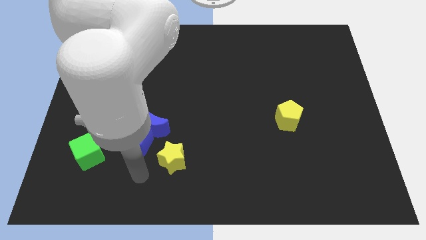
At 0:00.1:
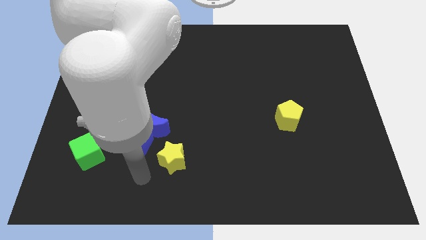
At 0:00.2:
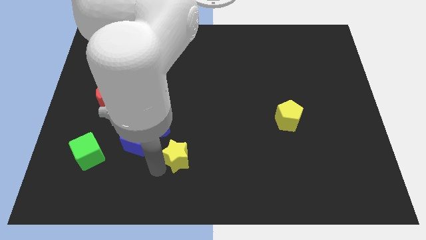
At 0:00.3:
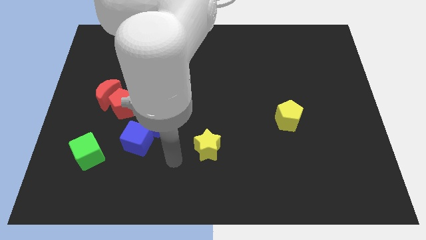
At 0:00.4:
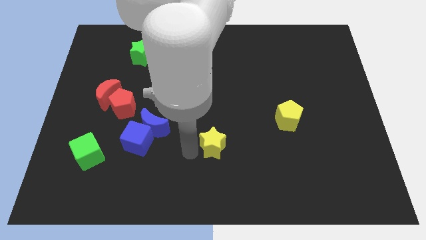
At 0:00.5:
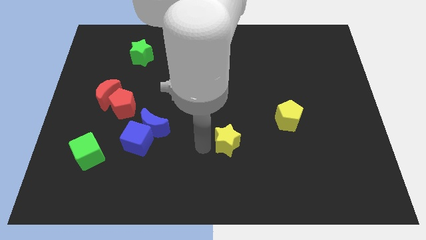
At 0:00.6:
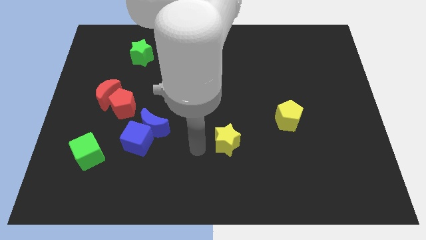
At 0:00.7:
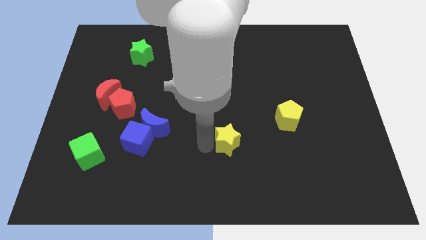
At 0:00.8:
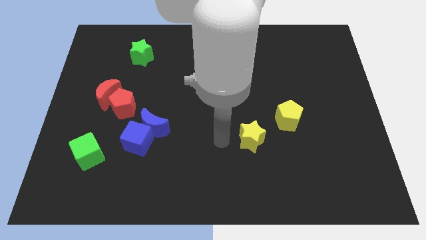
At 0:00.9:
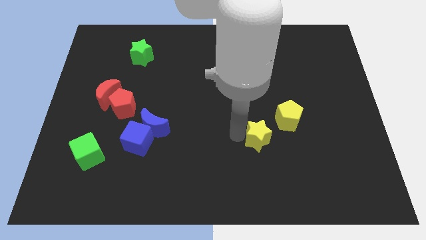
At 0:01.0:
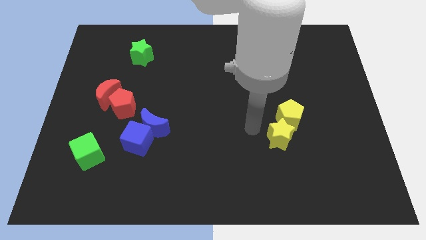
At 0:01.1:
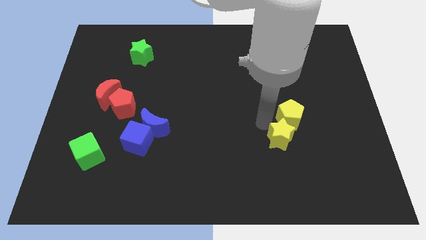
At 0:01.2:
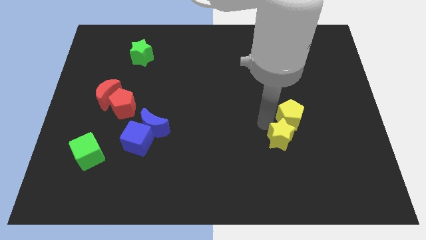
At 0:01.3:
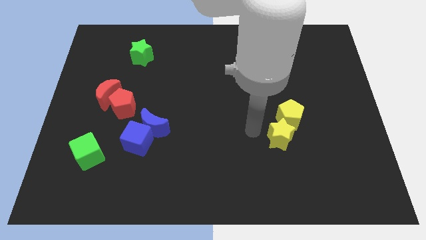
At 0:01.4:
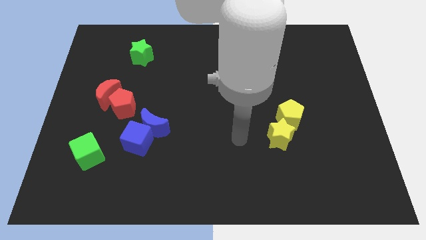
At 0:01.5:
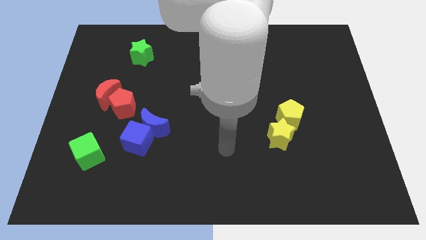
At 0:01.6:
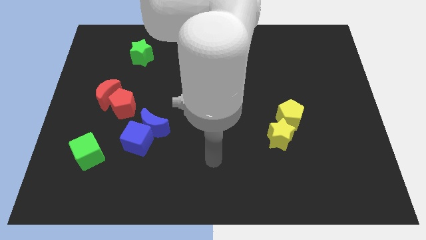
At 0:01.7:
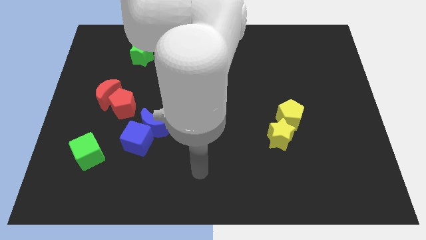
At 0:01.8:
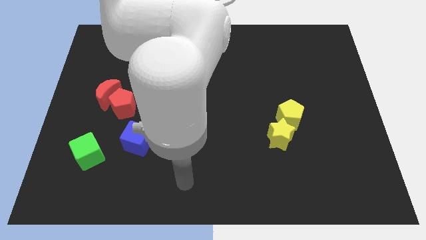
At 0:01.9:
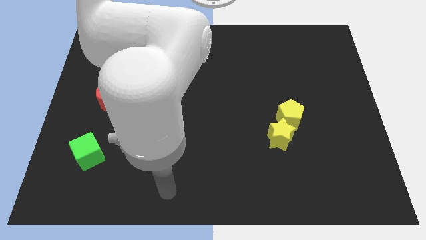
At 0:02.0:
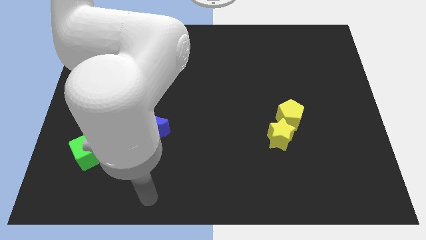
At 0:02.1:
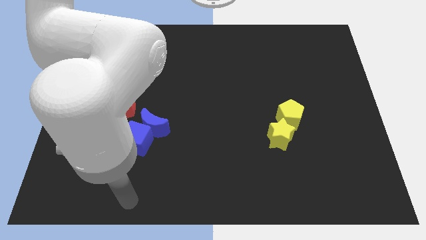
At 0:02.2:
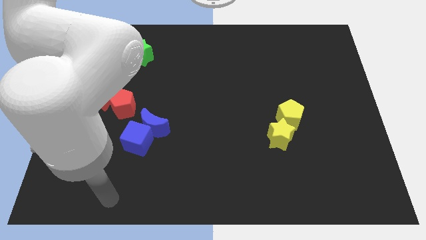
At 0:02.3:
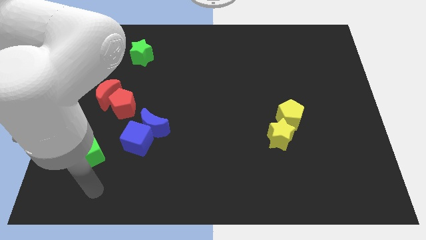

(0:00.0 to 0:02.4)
place the yellow star below the yellow pentagon

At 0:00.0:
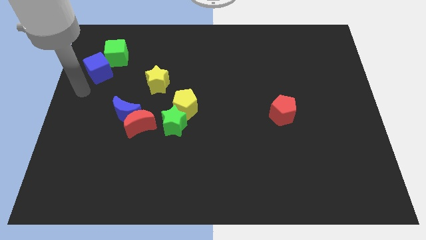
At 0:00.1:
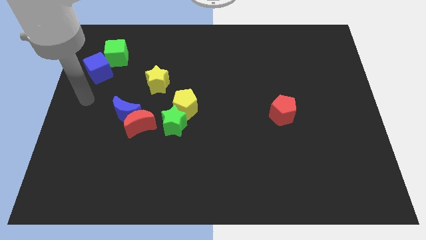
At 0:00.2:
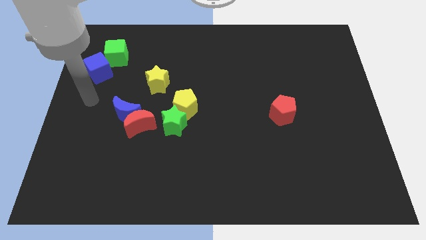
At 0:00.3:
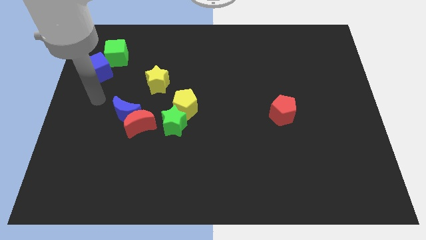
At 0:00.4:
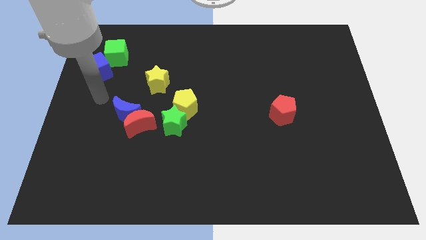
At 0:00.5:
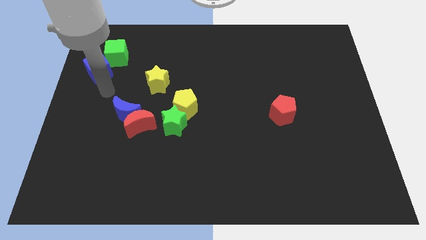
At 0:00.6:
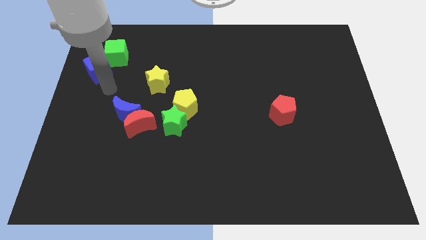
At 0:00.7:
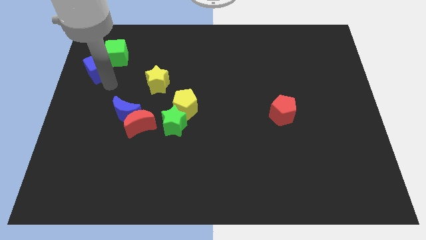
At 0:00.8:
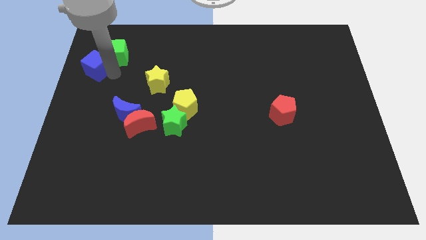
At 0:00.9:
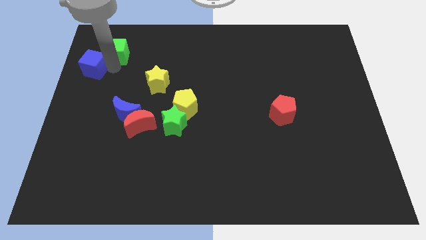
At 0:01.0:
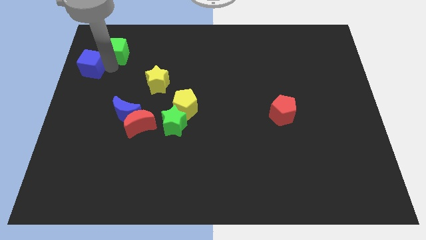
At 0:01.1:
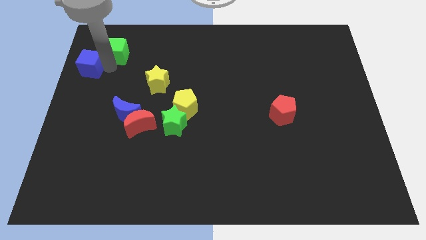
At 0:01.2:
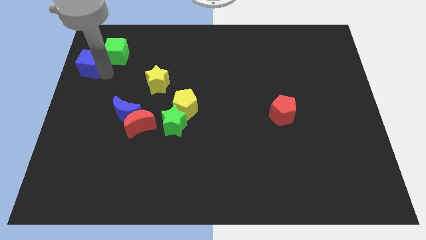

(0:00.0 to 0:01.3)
move blue cube to the left

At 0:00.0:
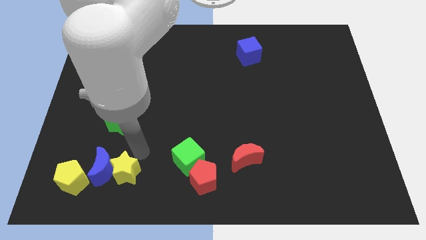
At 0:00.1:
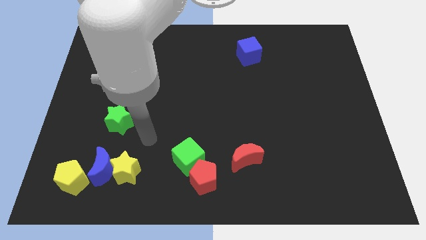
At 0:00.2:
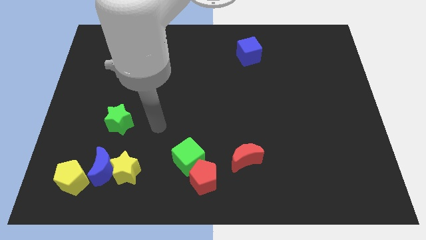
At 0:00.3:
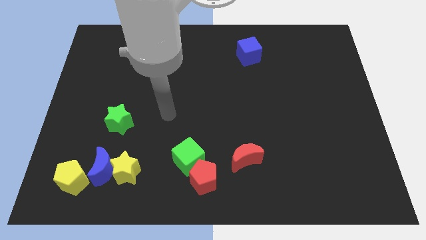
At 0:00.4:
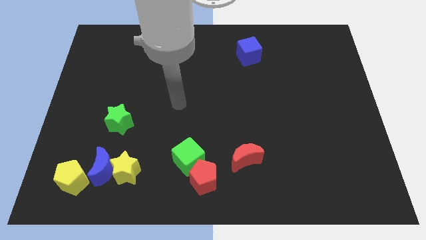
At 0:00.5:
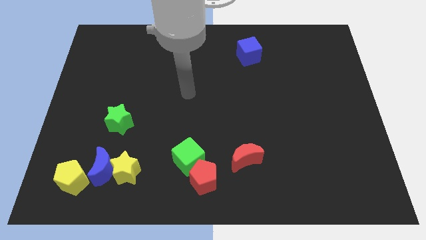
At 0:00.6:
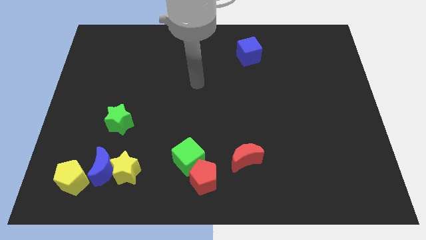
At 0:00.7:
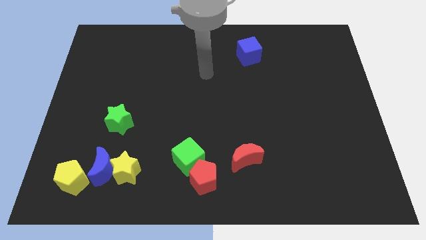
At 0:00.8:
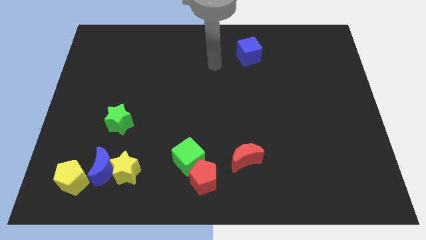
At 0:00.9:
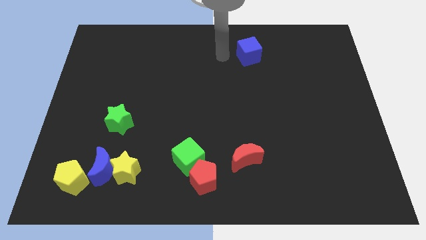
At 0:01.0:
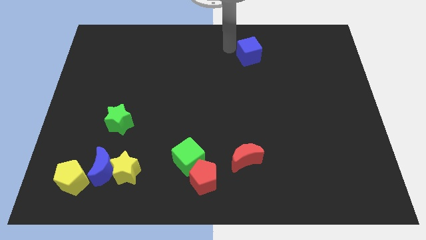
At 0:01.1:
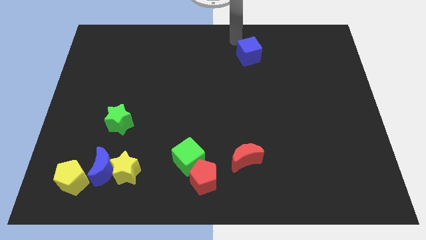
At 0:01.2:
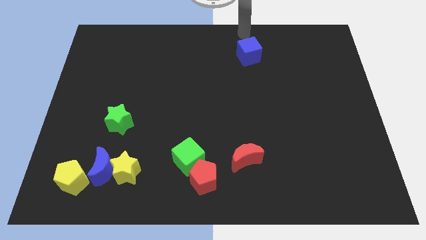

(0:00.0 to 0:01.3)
place the arm at the top side of the blue cube

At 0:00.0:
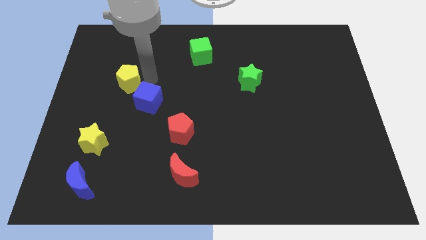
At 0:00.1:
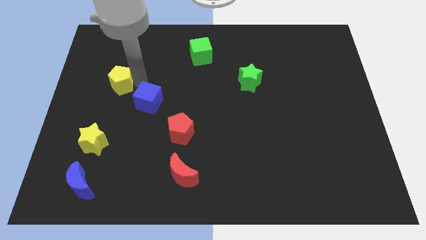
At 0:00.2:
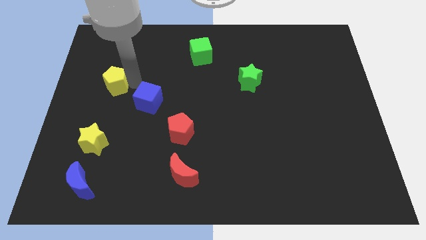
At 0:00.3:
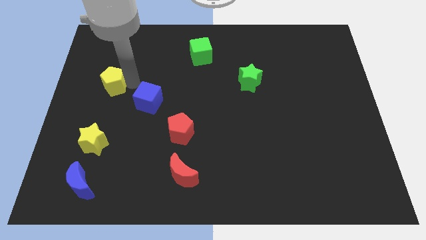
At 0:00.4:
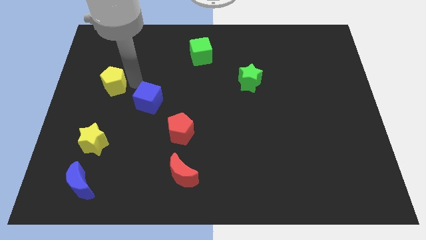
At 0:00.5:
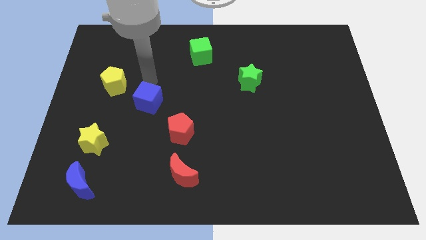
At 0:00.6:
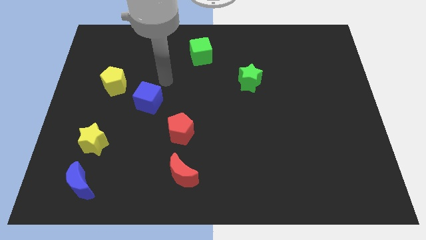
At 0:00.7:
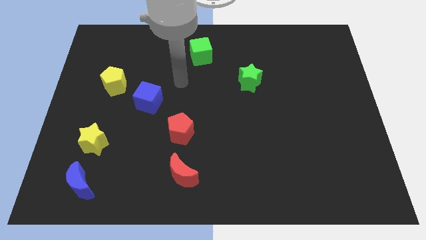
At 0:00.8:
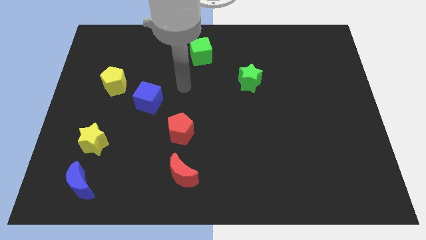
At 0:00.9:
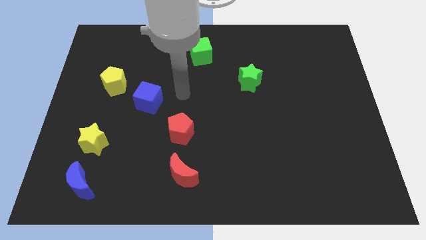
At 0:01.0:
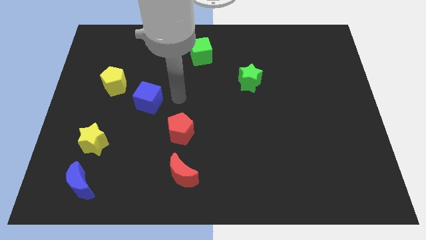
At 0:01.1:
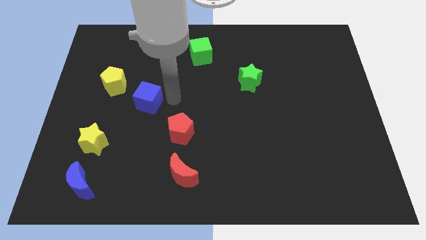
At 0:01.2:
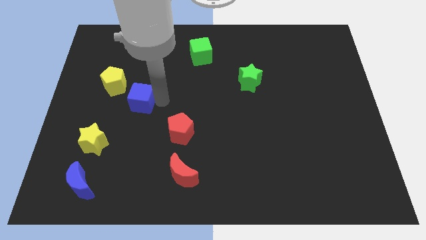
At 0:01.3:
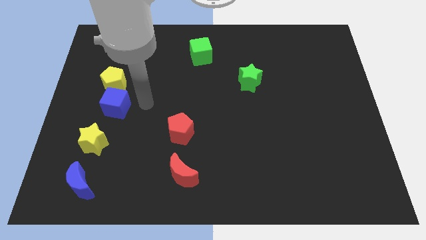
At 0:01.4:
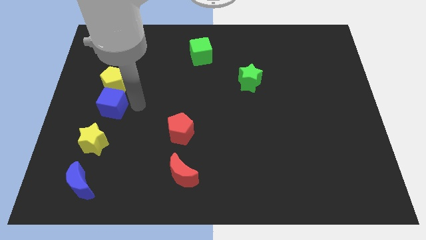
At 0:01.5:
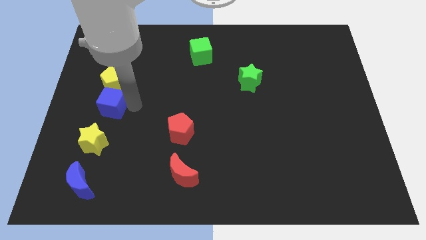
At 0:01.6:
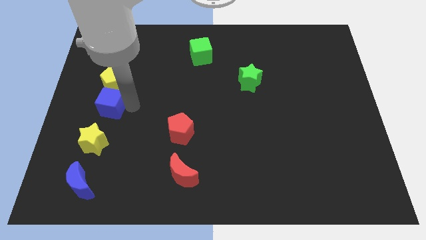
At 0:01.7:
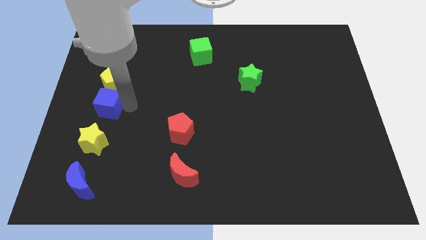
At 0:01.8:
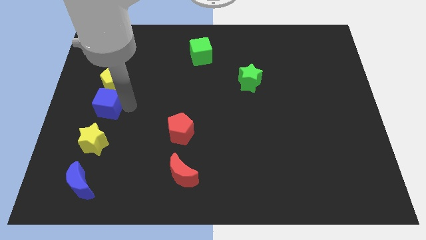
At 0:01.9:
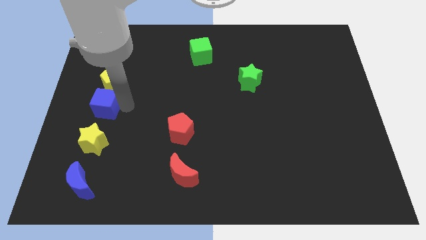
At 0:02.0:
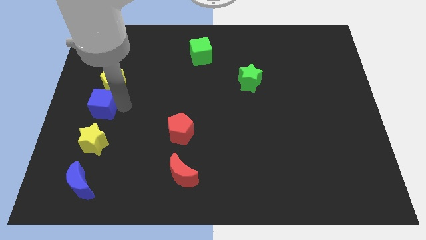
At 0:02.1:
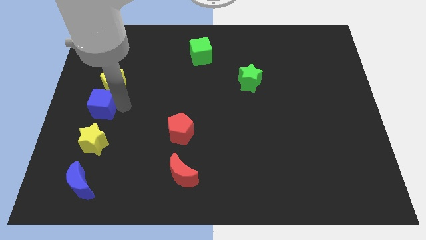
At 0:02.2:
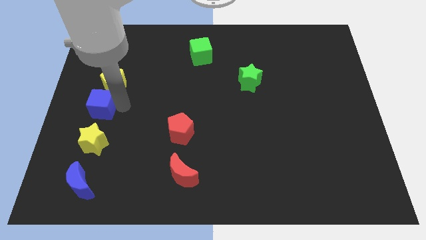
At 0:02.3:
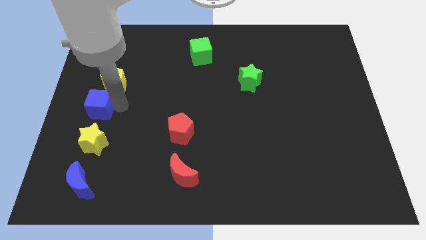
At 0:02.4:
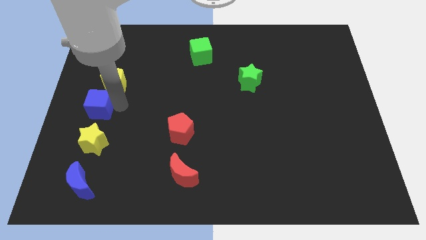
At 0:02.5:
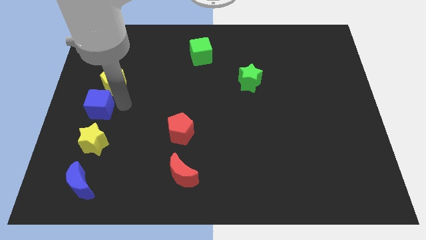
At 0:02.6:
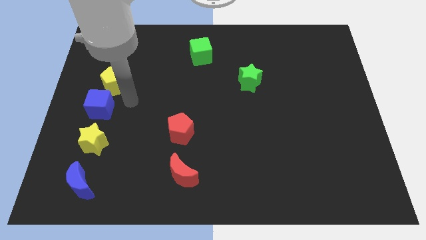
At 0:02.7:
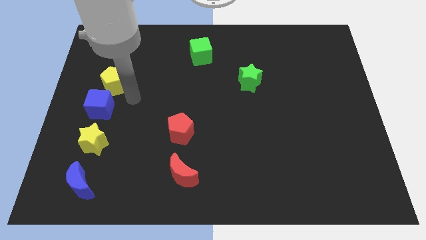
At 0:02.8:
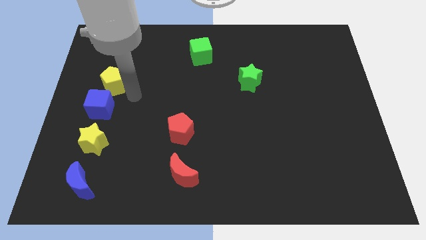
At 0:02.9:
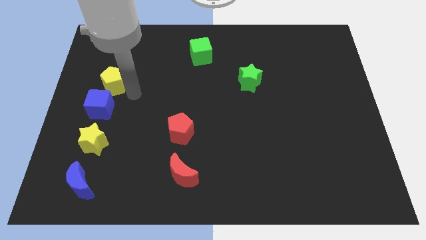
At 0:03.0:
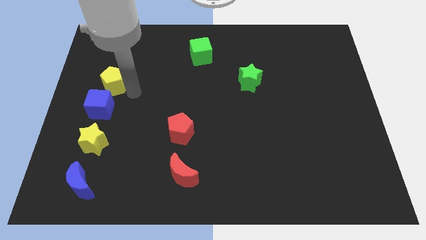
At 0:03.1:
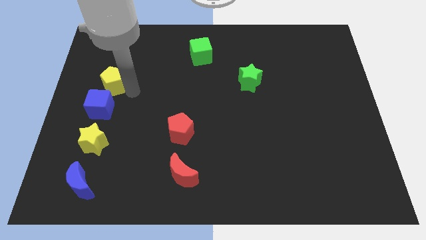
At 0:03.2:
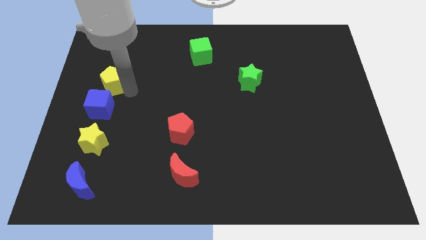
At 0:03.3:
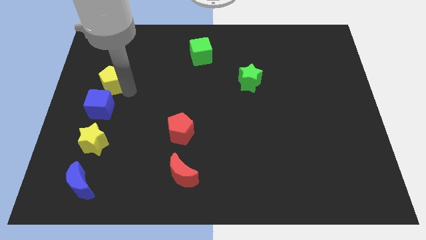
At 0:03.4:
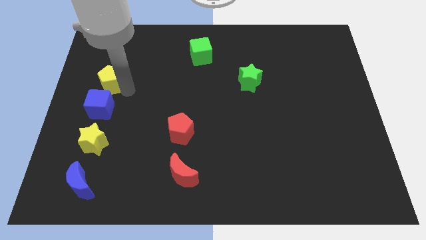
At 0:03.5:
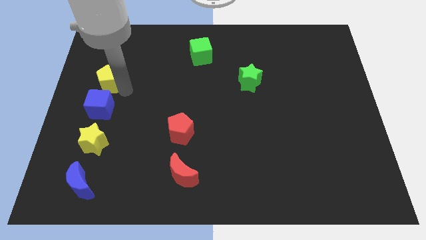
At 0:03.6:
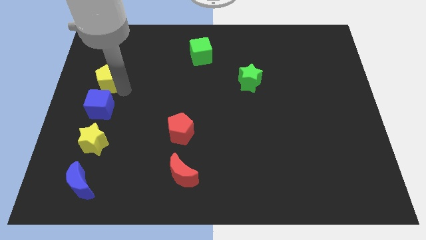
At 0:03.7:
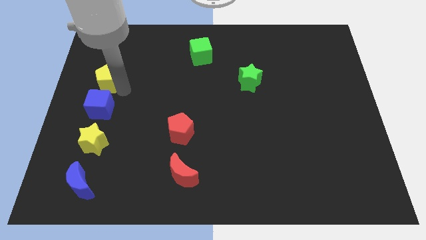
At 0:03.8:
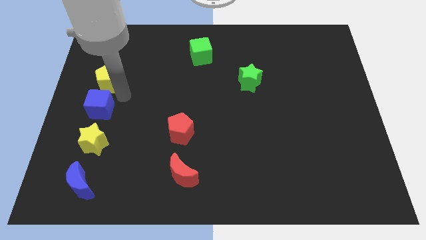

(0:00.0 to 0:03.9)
place the blue cube and yellow pentagon at the top side of the yellow star
